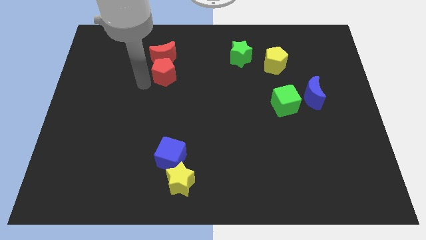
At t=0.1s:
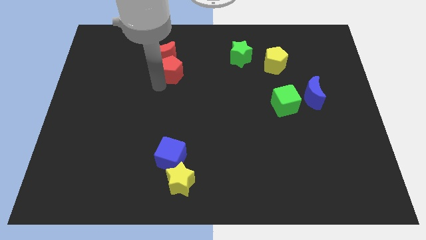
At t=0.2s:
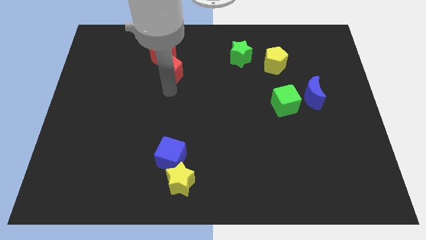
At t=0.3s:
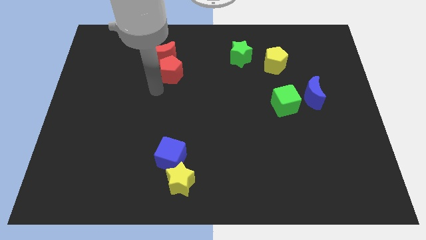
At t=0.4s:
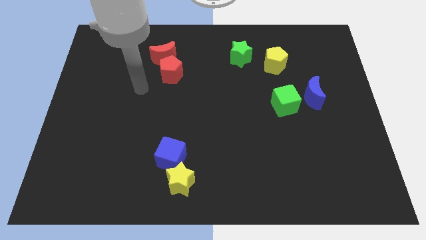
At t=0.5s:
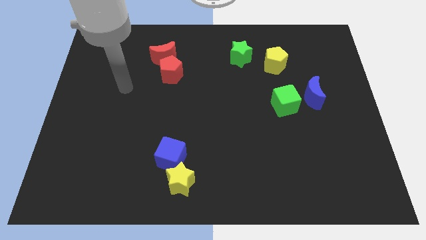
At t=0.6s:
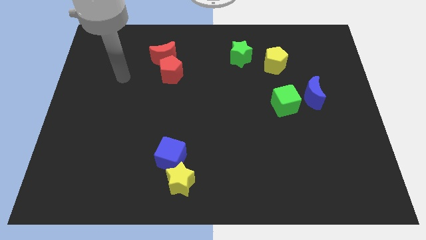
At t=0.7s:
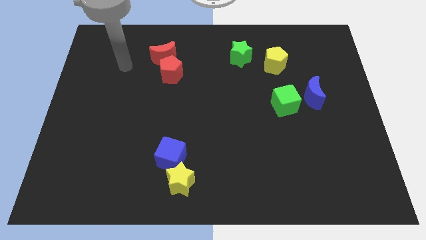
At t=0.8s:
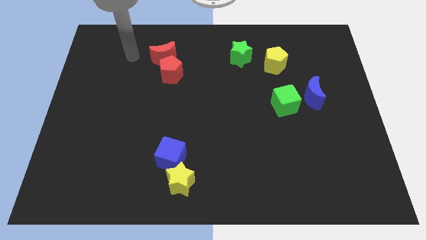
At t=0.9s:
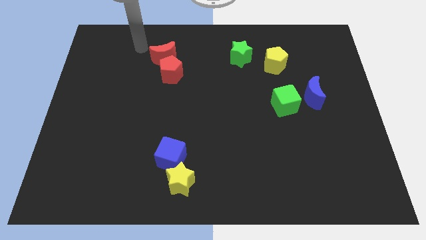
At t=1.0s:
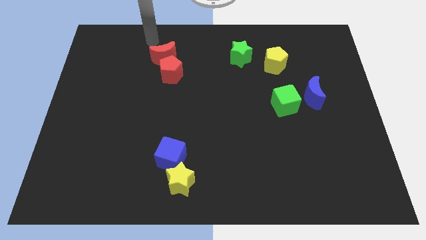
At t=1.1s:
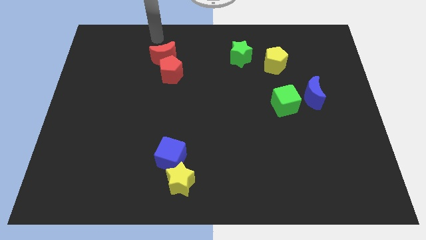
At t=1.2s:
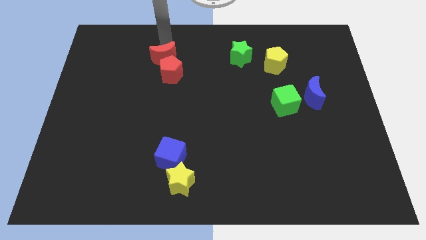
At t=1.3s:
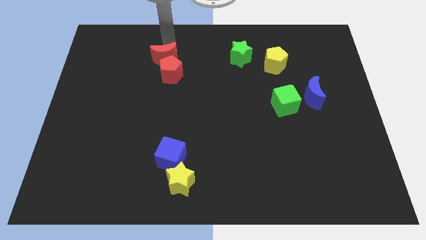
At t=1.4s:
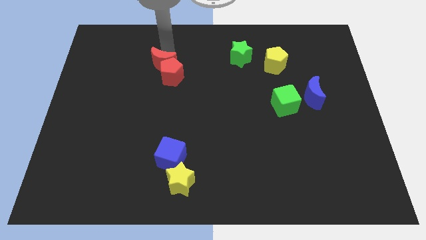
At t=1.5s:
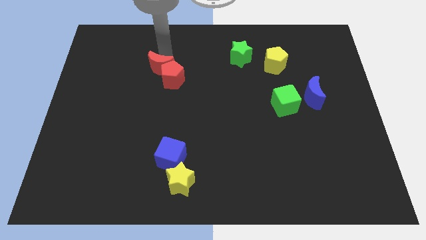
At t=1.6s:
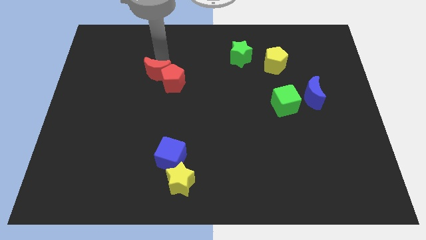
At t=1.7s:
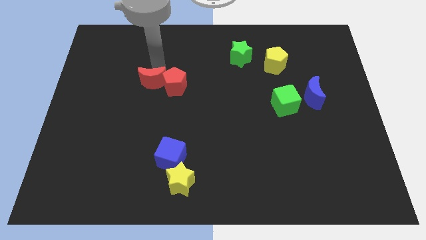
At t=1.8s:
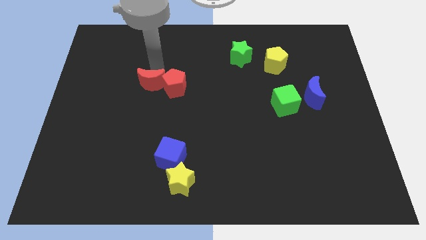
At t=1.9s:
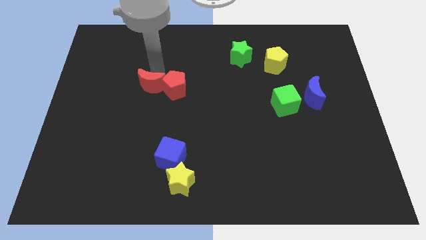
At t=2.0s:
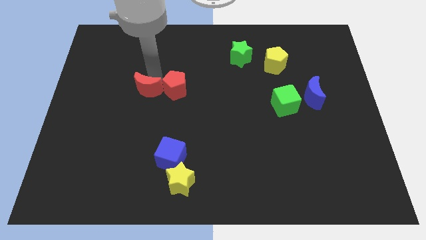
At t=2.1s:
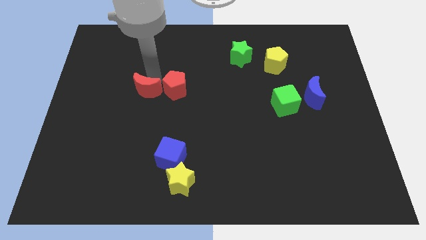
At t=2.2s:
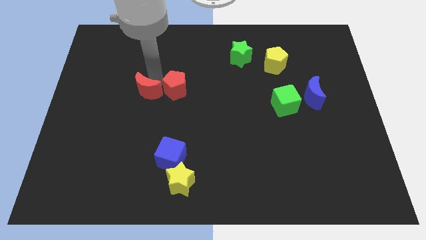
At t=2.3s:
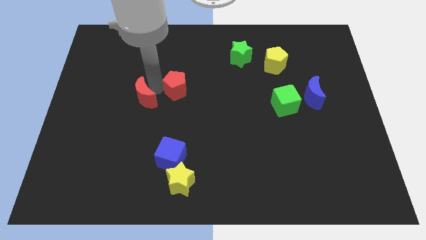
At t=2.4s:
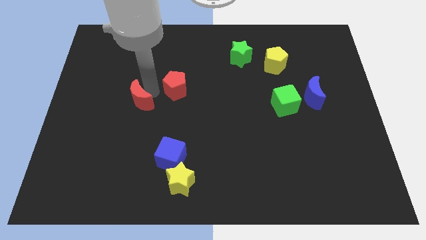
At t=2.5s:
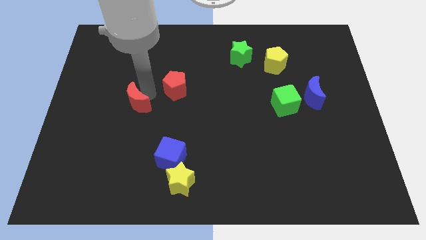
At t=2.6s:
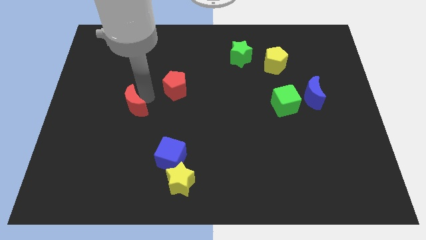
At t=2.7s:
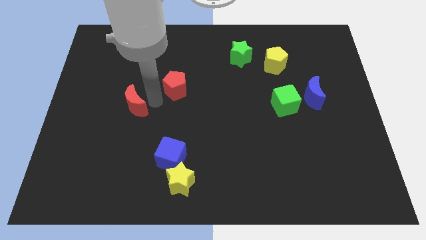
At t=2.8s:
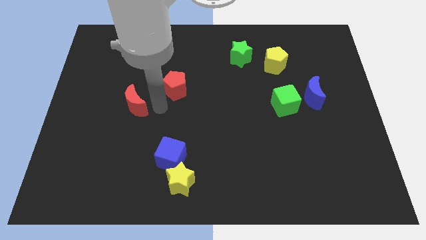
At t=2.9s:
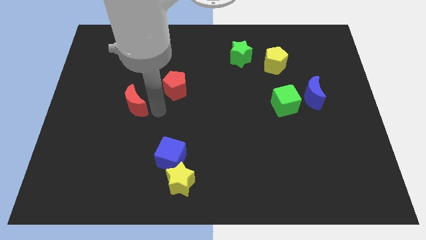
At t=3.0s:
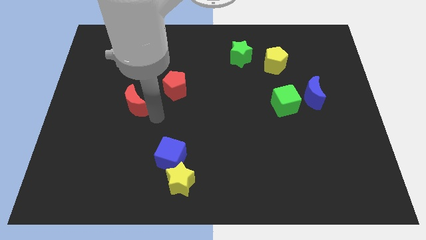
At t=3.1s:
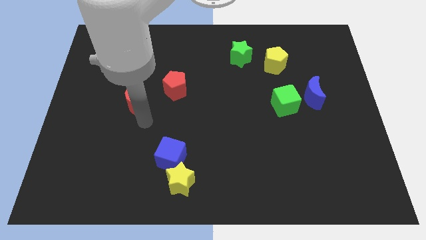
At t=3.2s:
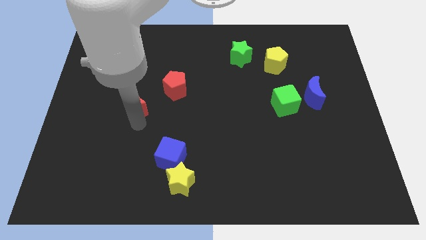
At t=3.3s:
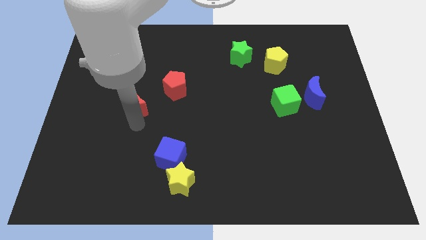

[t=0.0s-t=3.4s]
separate red moon and the red pentagon

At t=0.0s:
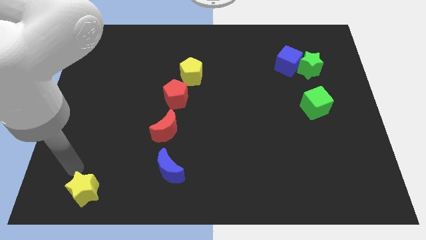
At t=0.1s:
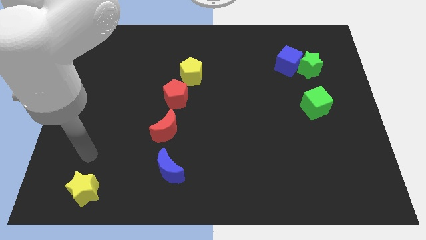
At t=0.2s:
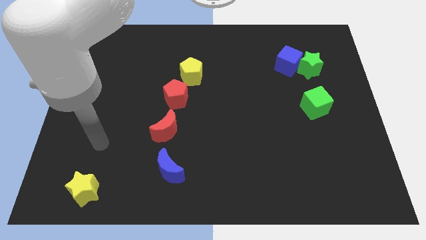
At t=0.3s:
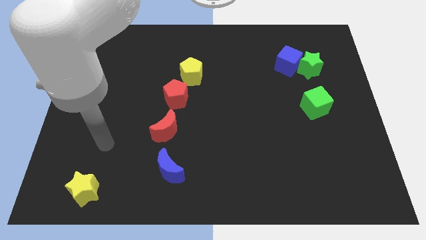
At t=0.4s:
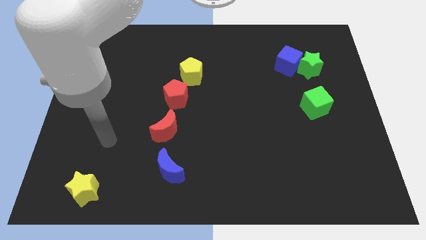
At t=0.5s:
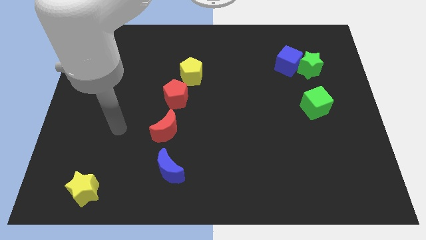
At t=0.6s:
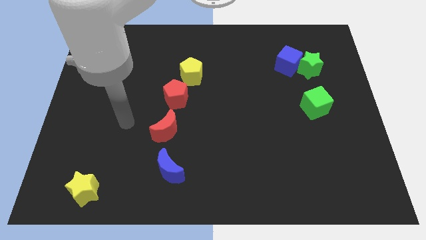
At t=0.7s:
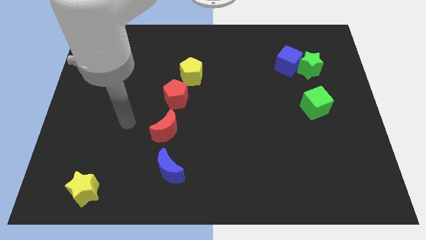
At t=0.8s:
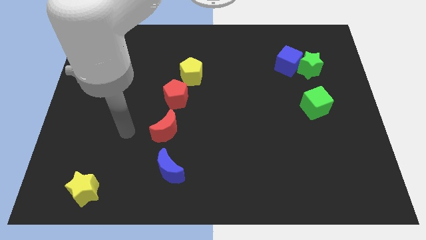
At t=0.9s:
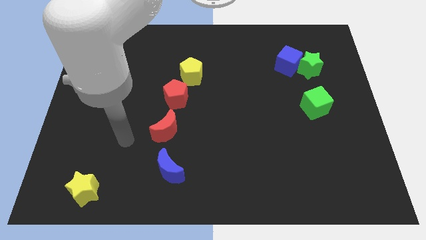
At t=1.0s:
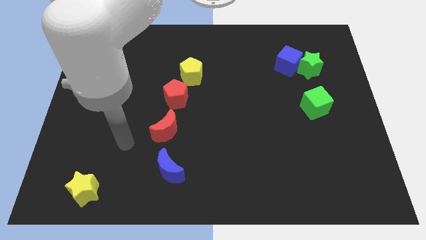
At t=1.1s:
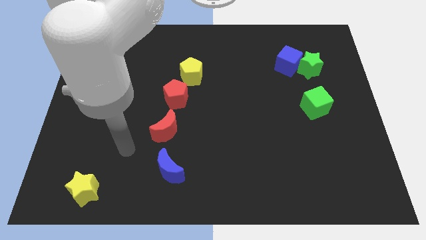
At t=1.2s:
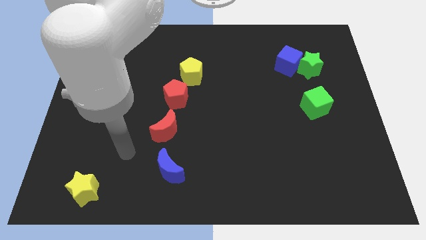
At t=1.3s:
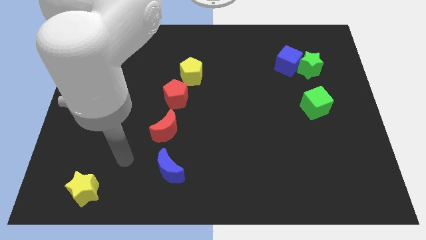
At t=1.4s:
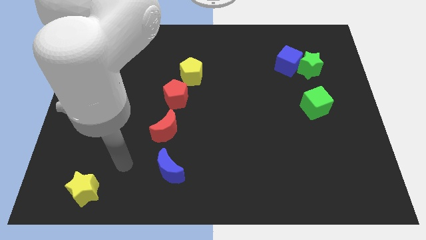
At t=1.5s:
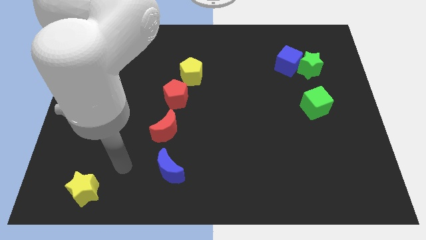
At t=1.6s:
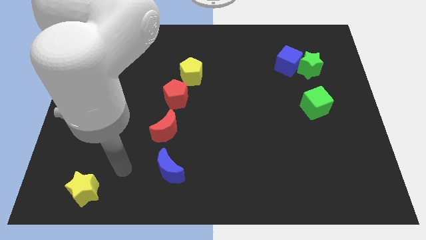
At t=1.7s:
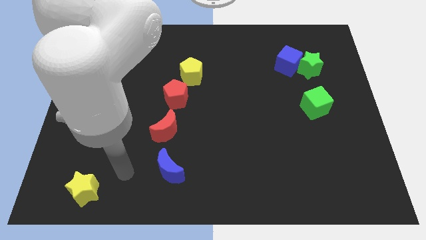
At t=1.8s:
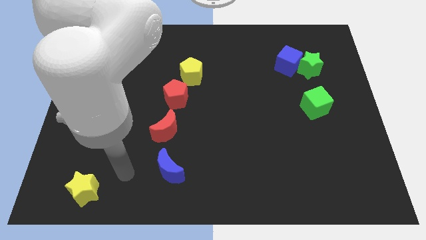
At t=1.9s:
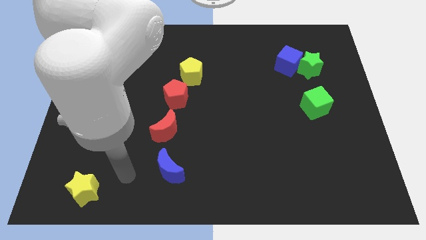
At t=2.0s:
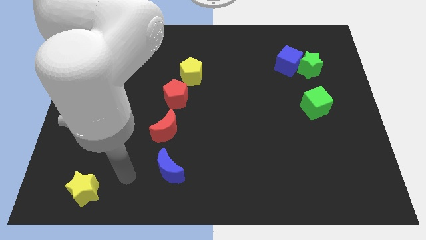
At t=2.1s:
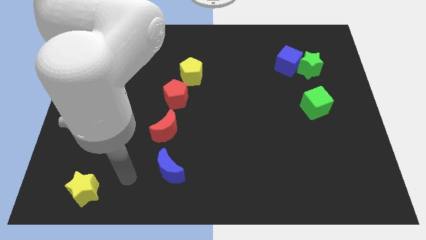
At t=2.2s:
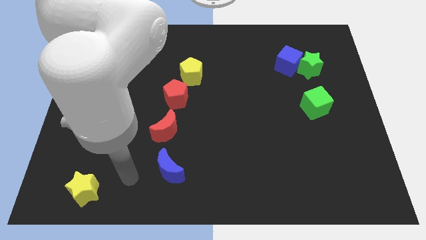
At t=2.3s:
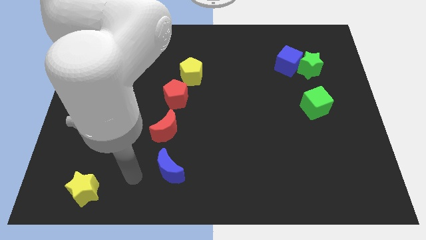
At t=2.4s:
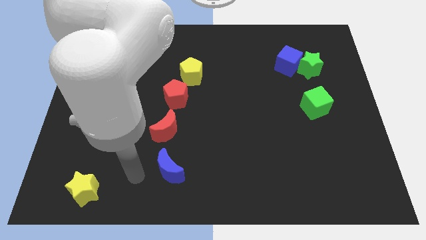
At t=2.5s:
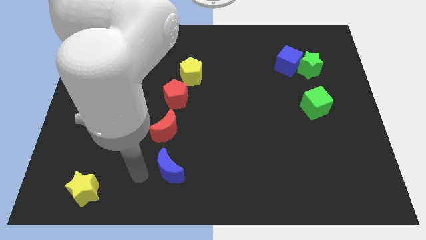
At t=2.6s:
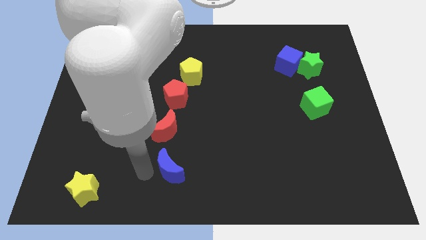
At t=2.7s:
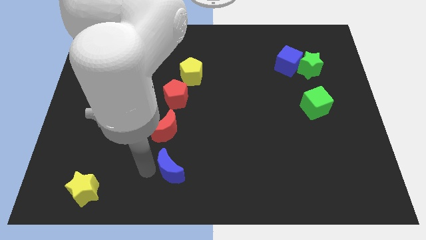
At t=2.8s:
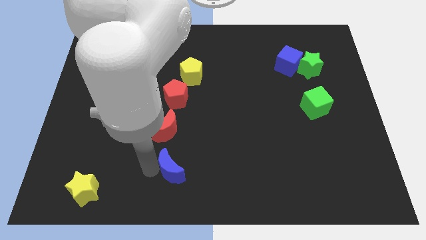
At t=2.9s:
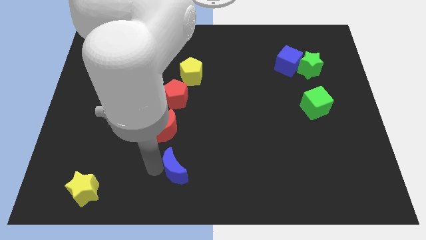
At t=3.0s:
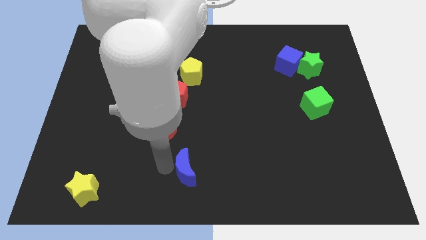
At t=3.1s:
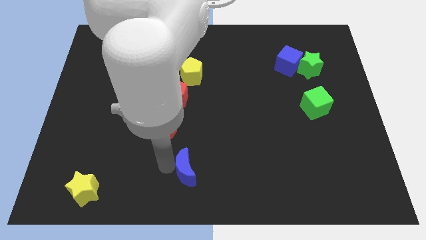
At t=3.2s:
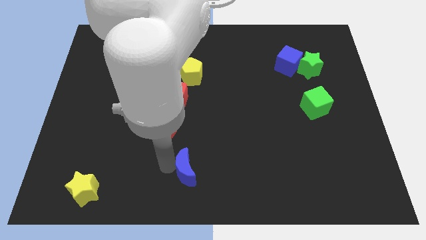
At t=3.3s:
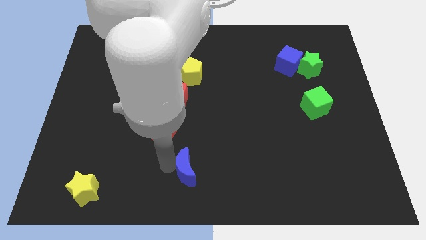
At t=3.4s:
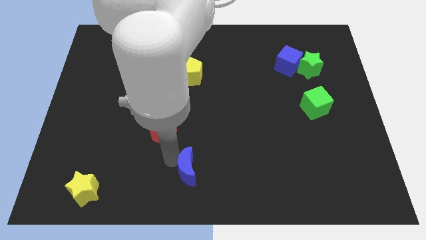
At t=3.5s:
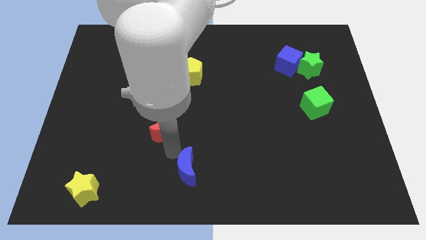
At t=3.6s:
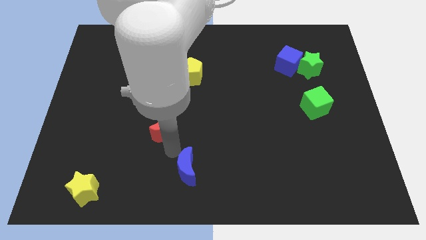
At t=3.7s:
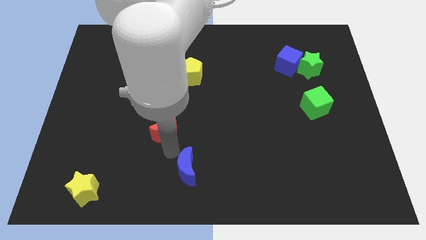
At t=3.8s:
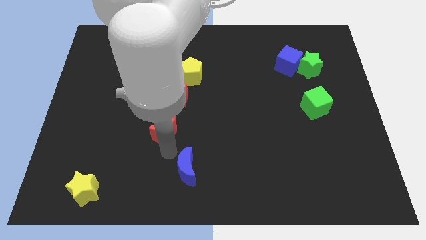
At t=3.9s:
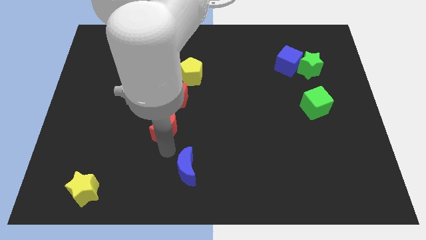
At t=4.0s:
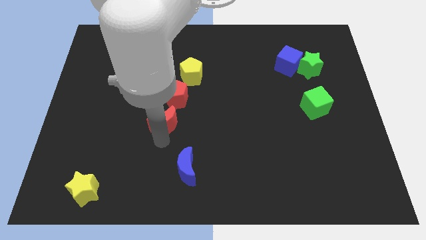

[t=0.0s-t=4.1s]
drag the blue moon diagonally bottom right to the red crescent

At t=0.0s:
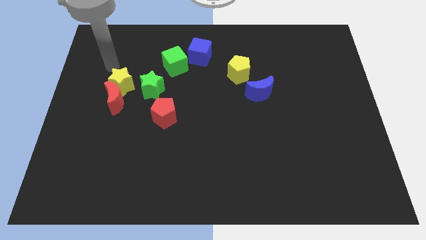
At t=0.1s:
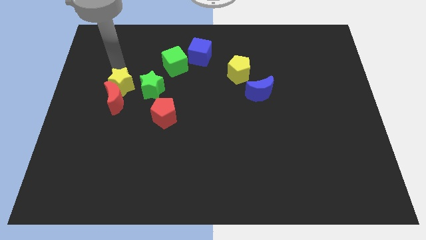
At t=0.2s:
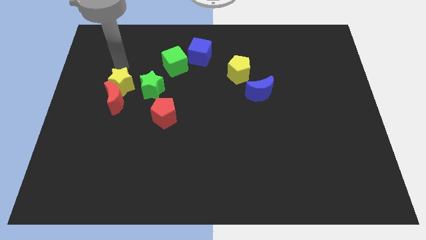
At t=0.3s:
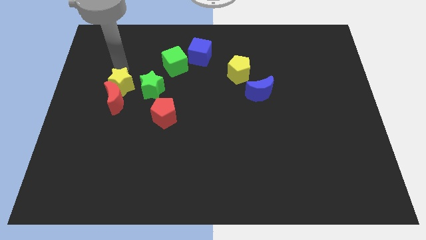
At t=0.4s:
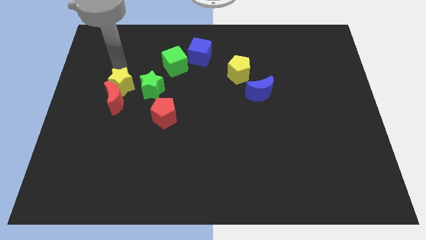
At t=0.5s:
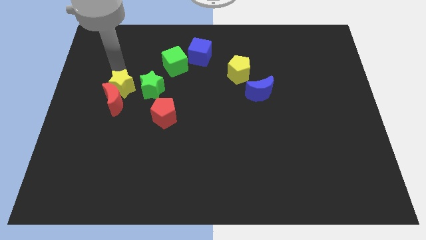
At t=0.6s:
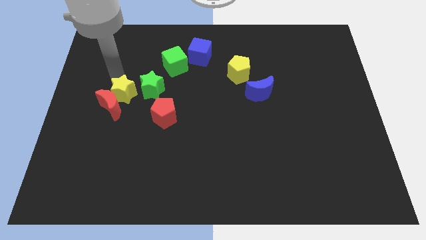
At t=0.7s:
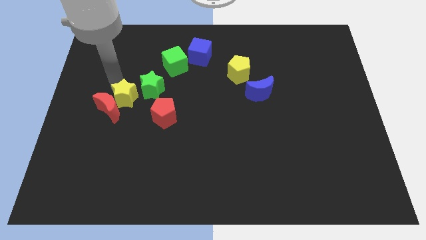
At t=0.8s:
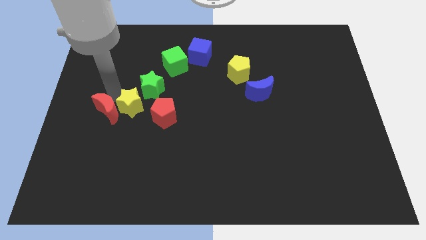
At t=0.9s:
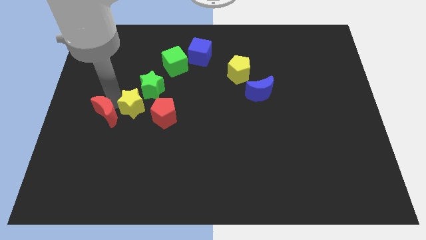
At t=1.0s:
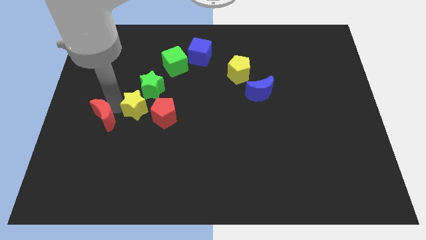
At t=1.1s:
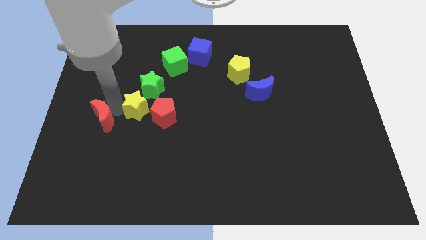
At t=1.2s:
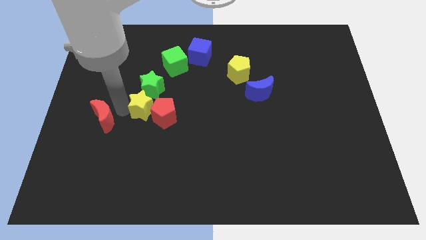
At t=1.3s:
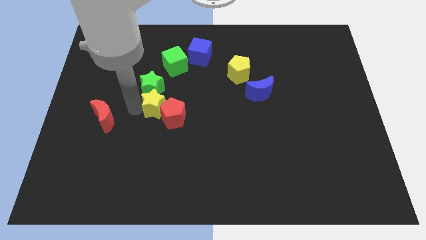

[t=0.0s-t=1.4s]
separate the yellow star and red moon

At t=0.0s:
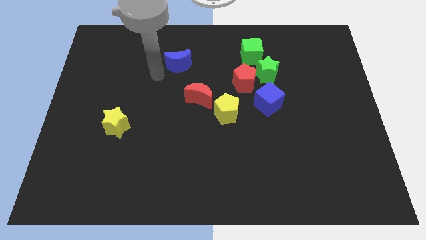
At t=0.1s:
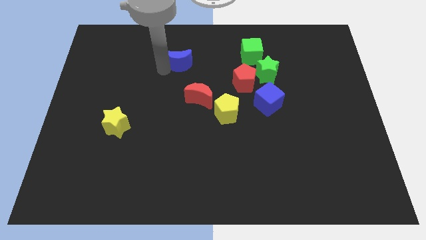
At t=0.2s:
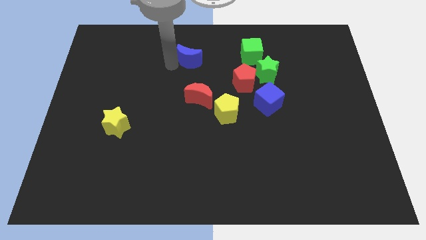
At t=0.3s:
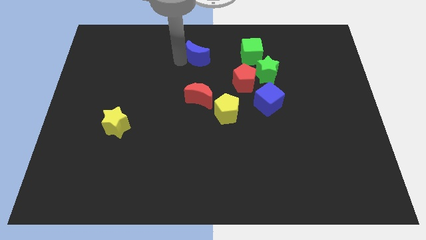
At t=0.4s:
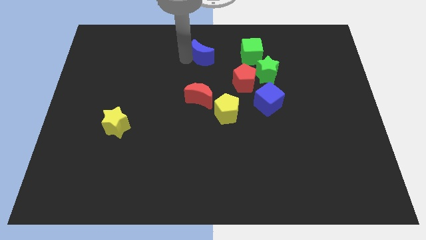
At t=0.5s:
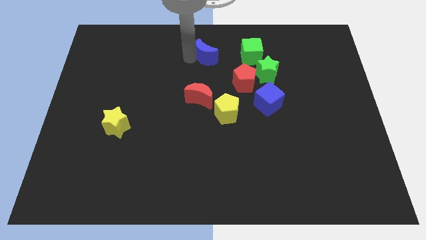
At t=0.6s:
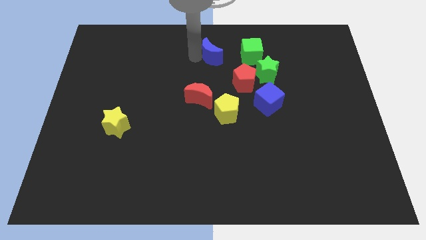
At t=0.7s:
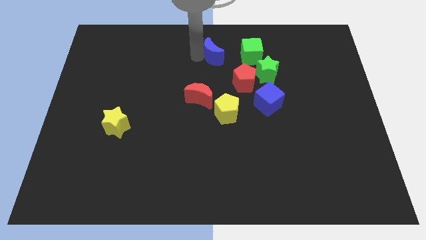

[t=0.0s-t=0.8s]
push the blue moon towards the left of green cube
